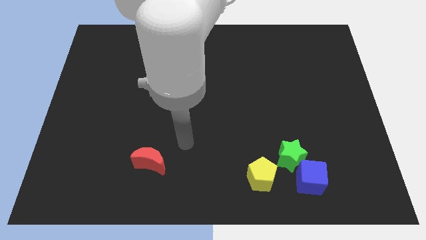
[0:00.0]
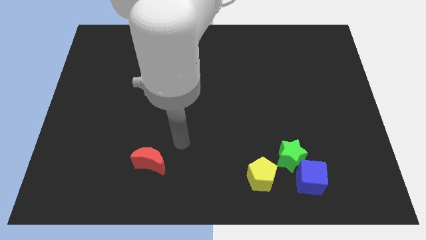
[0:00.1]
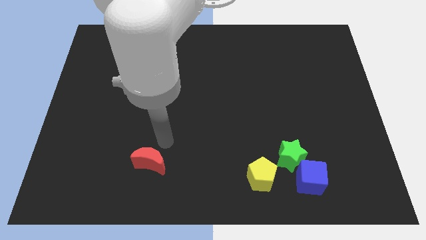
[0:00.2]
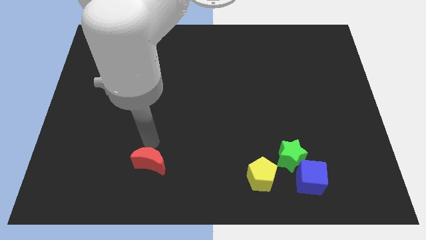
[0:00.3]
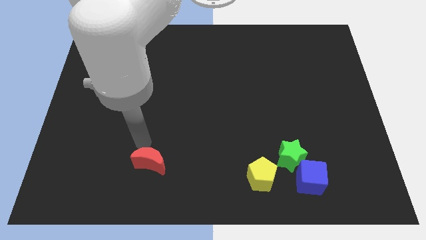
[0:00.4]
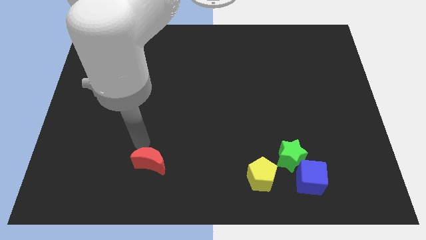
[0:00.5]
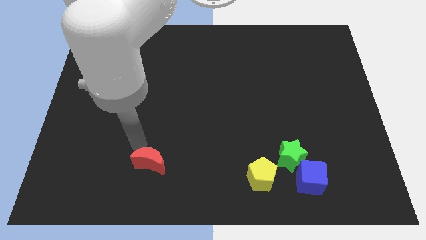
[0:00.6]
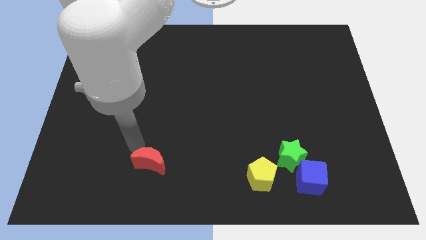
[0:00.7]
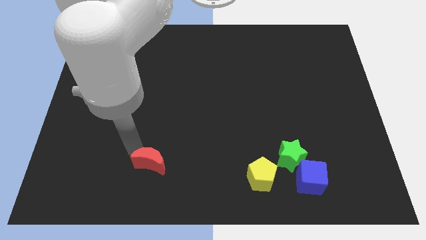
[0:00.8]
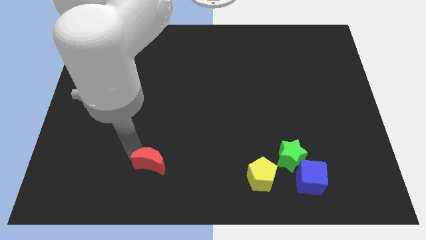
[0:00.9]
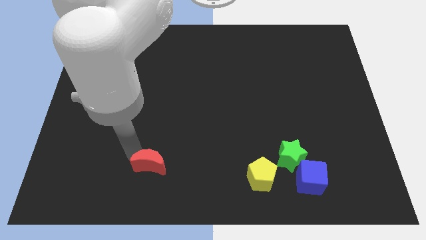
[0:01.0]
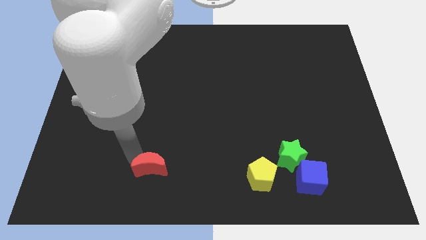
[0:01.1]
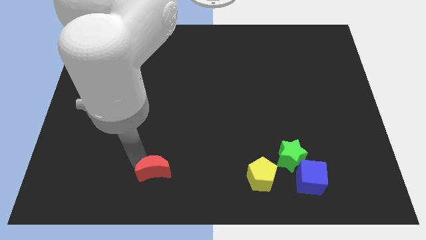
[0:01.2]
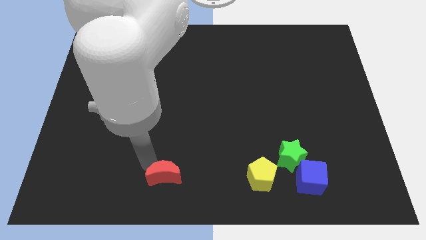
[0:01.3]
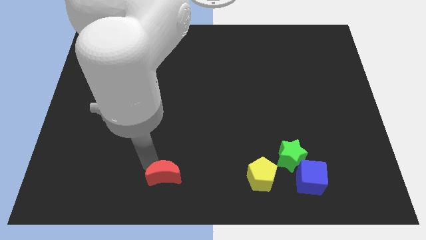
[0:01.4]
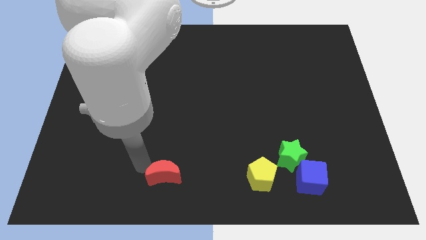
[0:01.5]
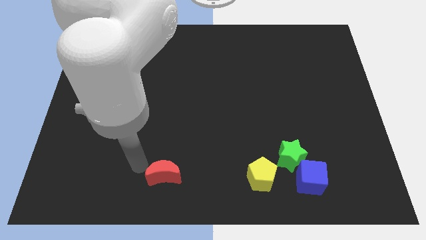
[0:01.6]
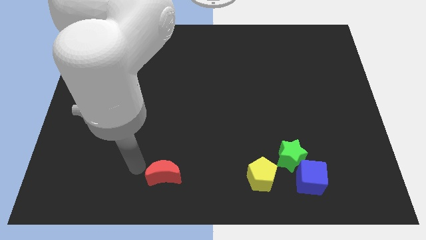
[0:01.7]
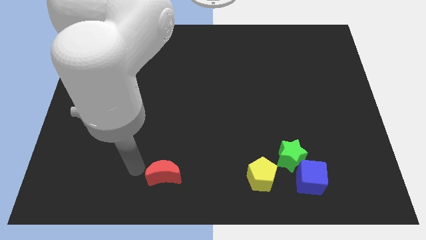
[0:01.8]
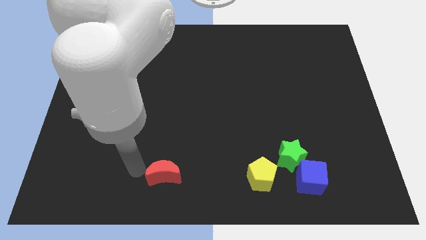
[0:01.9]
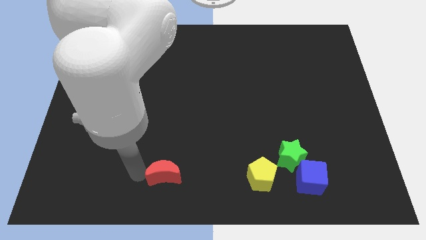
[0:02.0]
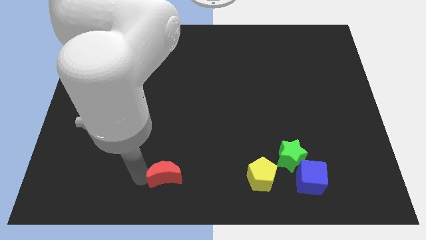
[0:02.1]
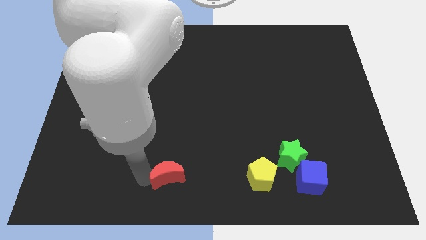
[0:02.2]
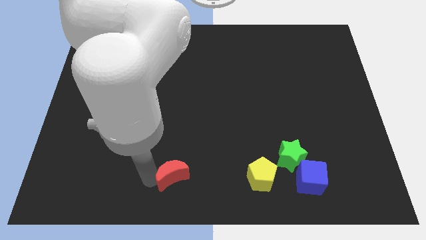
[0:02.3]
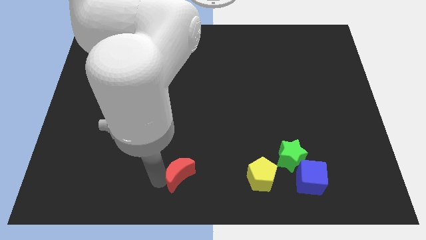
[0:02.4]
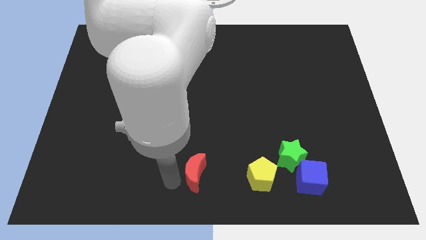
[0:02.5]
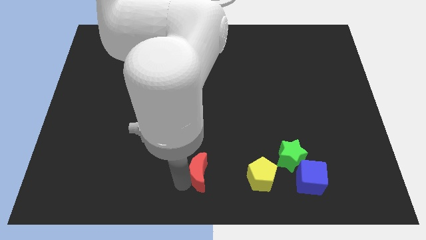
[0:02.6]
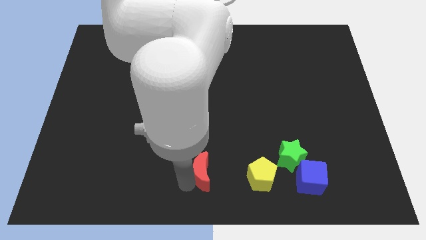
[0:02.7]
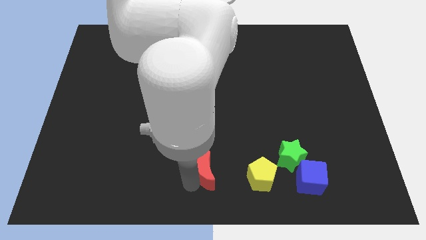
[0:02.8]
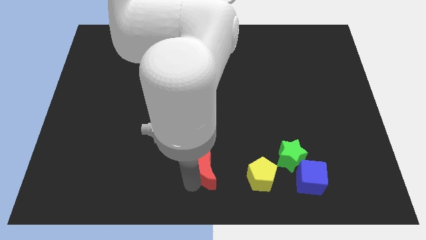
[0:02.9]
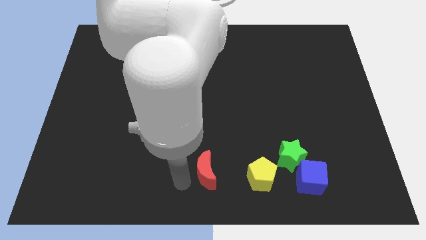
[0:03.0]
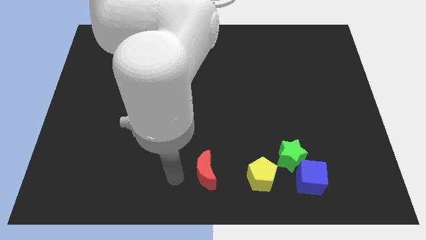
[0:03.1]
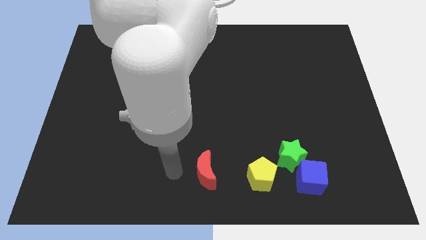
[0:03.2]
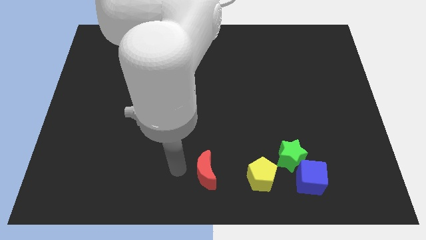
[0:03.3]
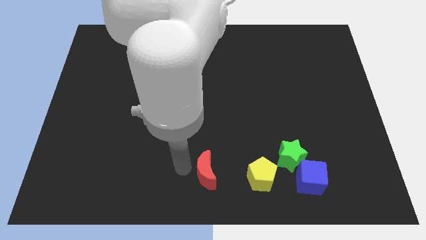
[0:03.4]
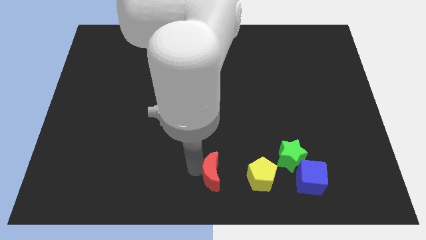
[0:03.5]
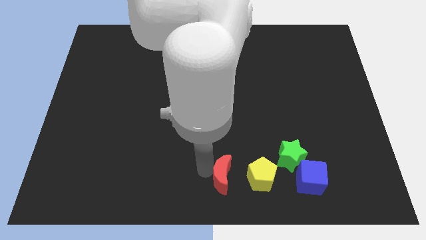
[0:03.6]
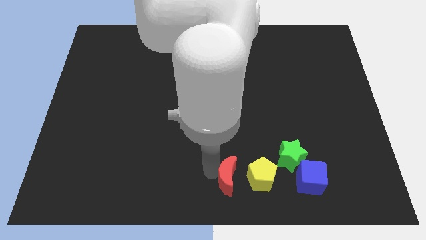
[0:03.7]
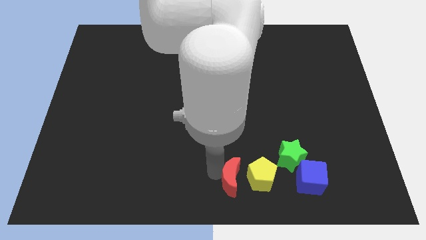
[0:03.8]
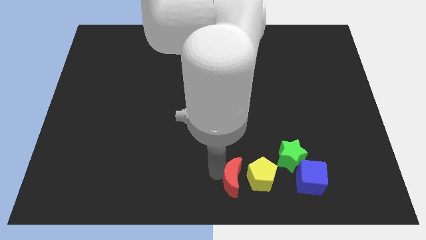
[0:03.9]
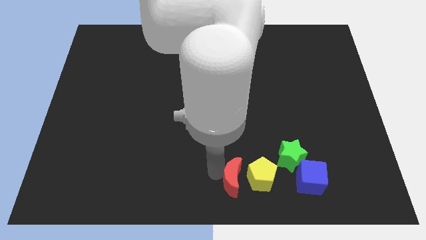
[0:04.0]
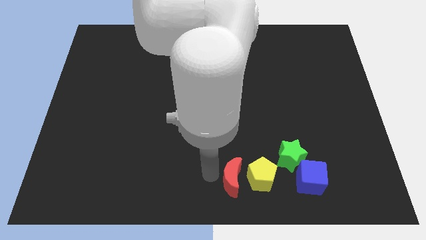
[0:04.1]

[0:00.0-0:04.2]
push the red block next to the yellow pentagon

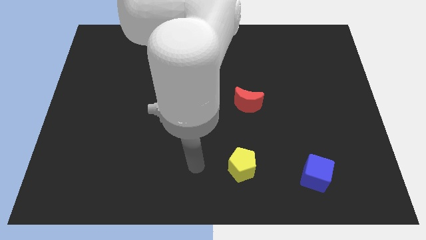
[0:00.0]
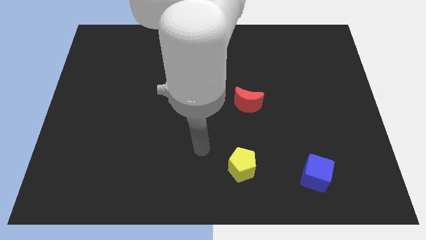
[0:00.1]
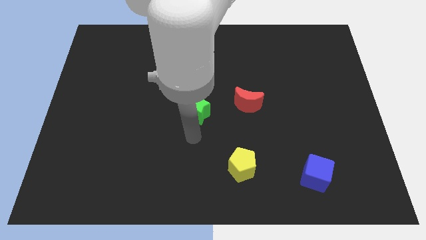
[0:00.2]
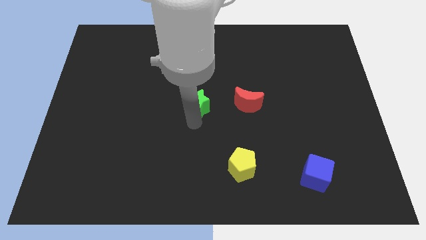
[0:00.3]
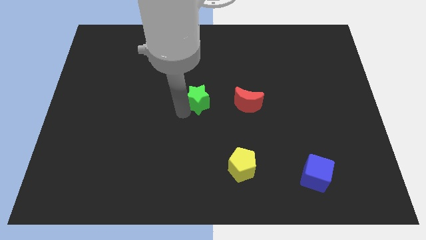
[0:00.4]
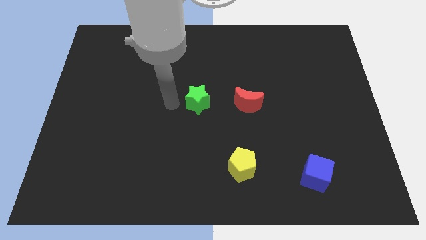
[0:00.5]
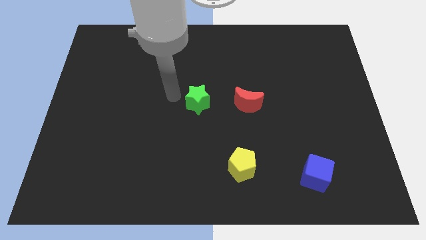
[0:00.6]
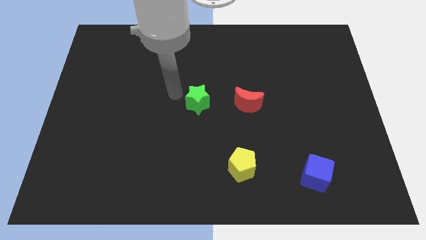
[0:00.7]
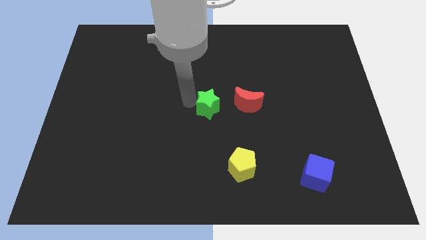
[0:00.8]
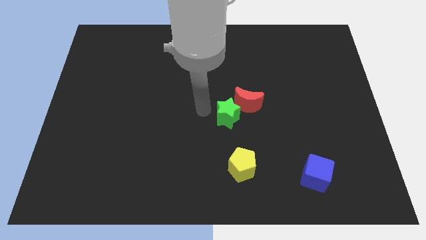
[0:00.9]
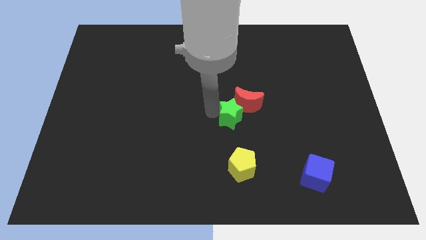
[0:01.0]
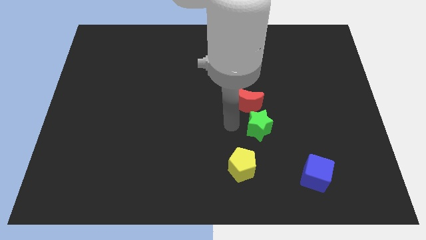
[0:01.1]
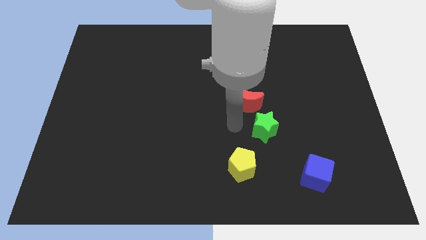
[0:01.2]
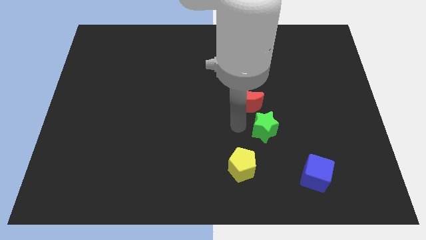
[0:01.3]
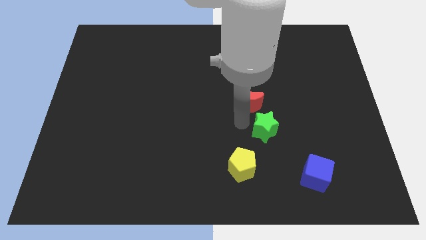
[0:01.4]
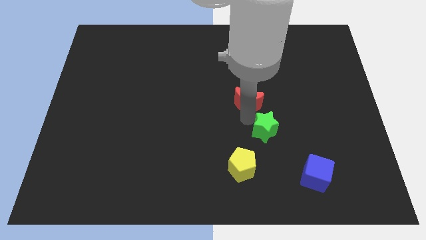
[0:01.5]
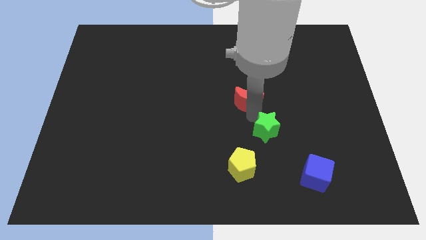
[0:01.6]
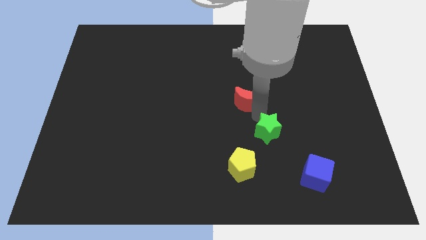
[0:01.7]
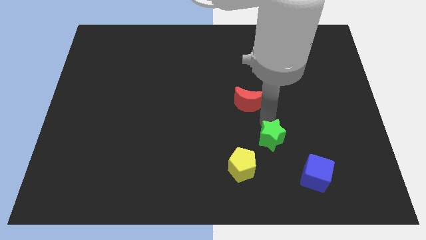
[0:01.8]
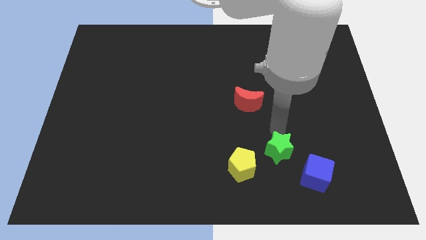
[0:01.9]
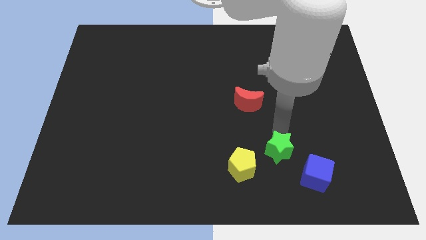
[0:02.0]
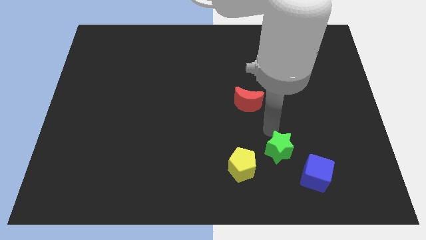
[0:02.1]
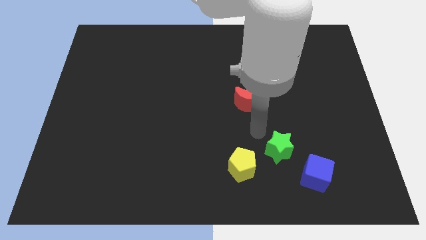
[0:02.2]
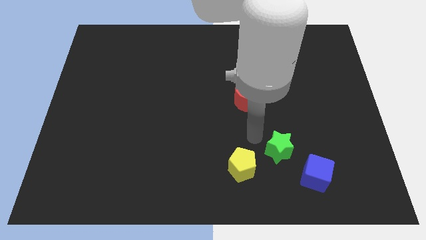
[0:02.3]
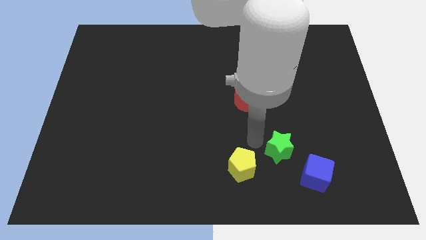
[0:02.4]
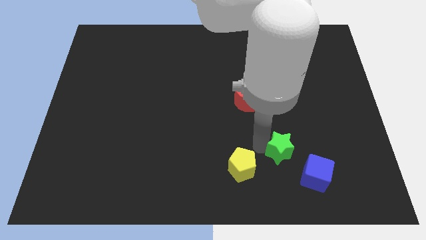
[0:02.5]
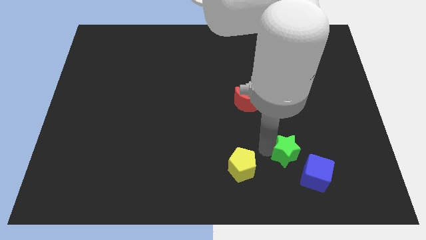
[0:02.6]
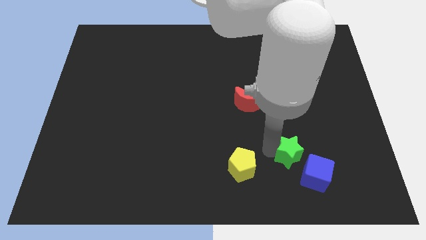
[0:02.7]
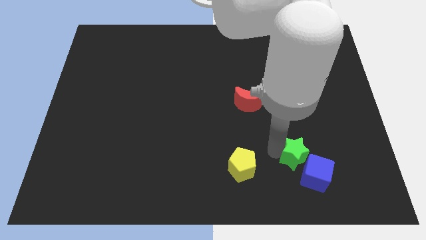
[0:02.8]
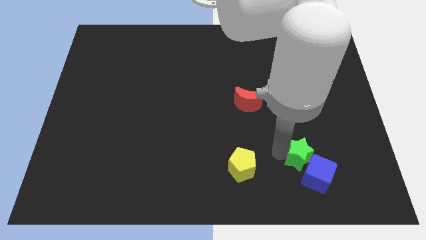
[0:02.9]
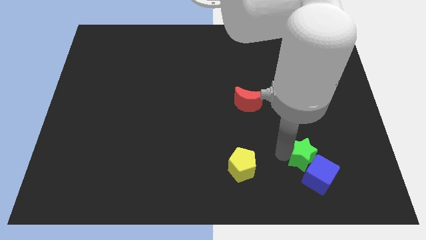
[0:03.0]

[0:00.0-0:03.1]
push the star towards the blue cube
